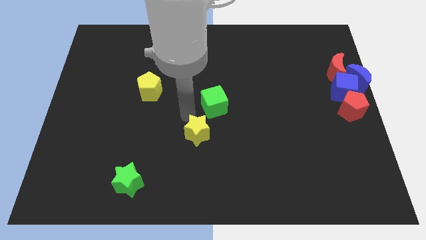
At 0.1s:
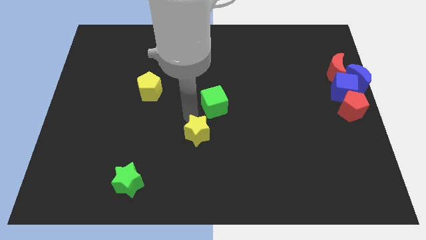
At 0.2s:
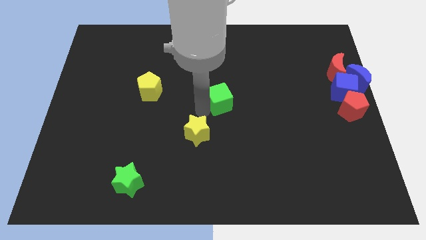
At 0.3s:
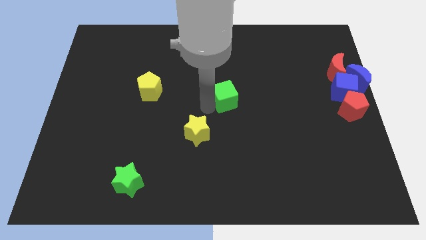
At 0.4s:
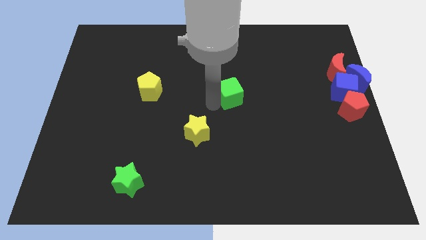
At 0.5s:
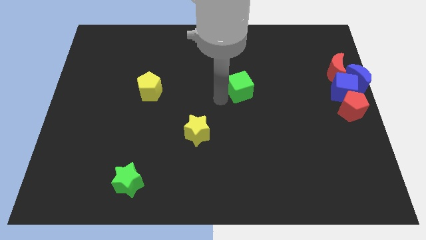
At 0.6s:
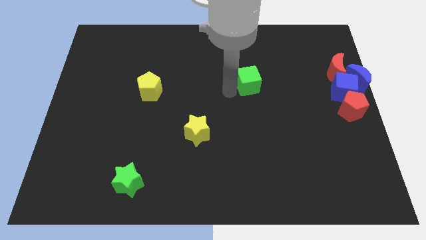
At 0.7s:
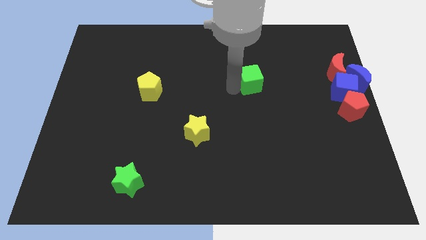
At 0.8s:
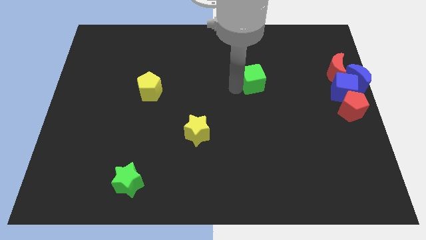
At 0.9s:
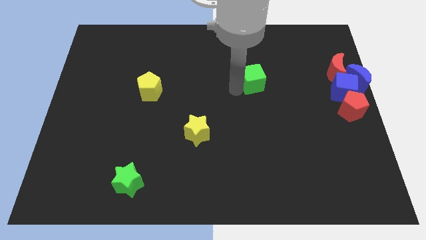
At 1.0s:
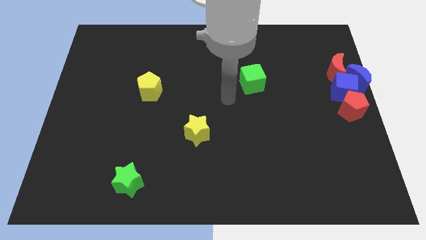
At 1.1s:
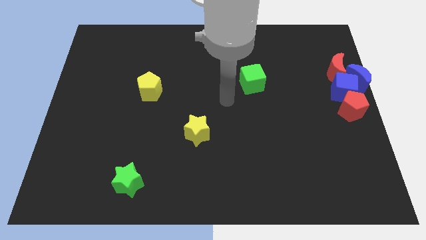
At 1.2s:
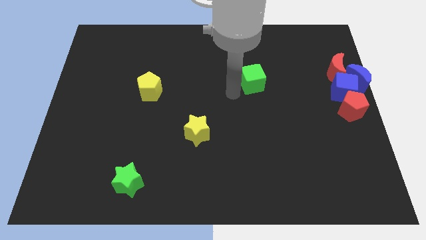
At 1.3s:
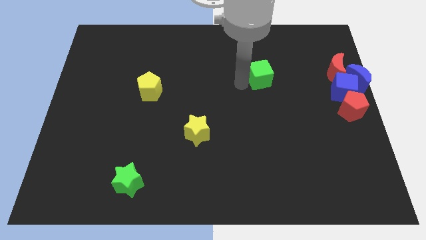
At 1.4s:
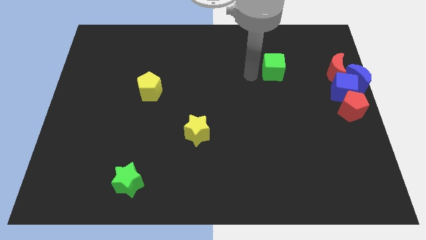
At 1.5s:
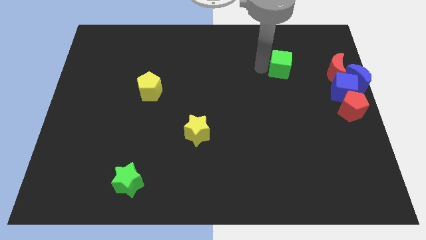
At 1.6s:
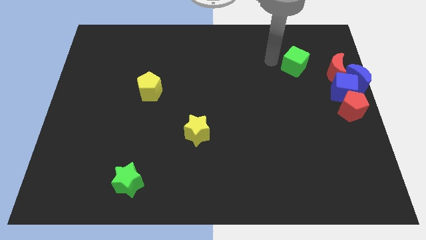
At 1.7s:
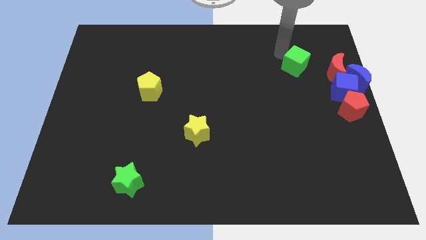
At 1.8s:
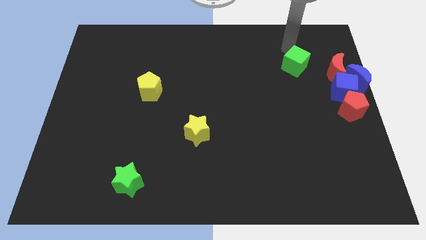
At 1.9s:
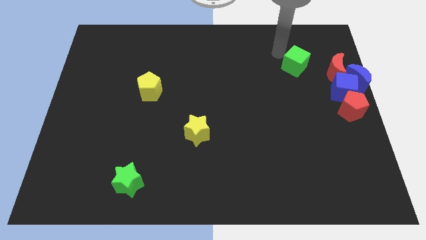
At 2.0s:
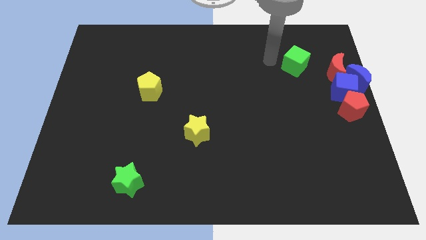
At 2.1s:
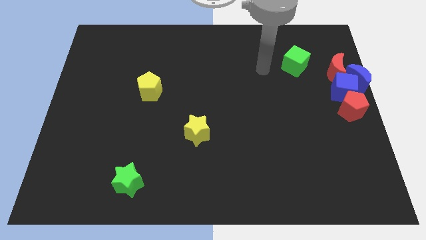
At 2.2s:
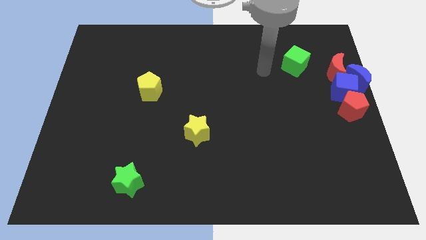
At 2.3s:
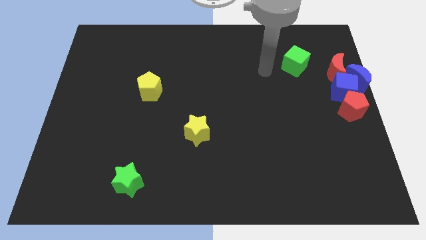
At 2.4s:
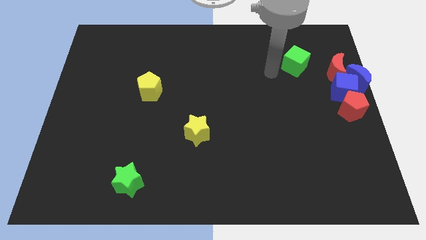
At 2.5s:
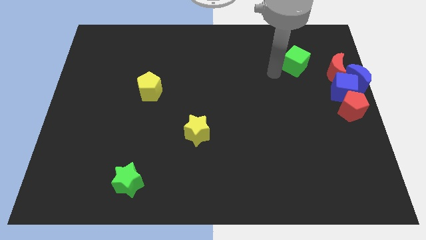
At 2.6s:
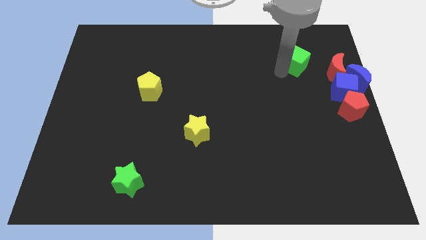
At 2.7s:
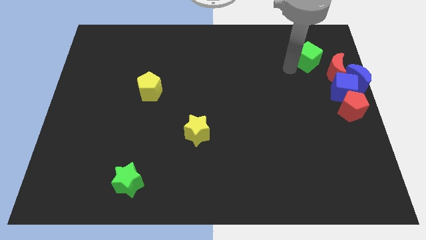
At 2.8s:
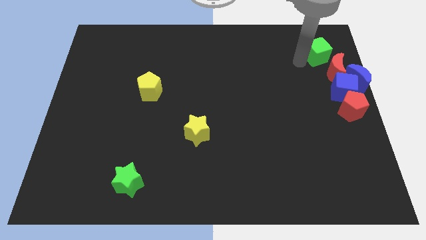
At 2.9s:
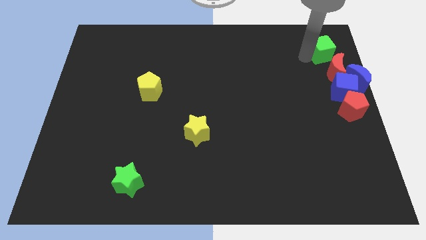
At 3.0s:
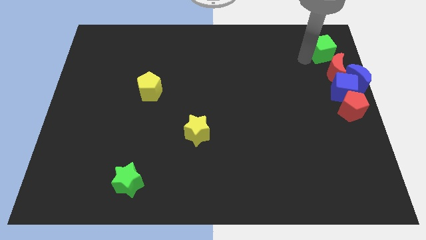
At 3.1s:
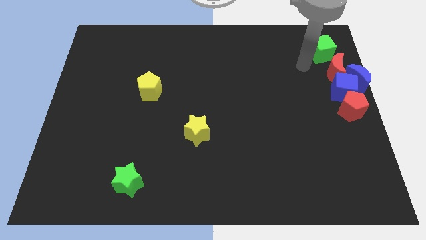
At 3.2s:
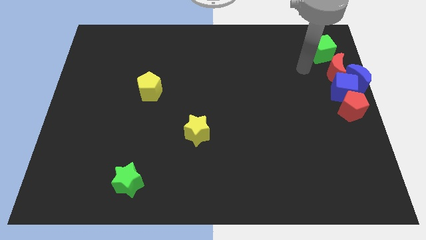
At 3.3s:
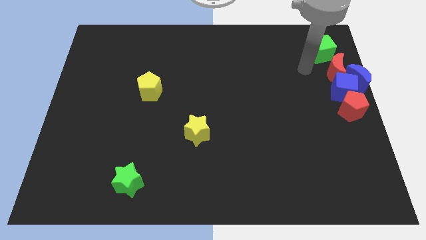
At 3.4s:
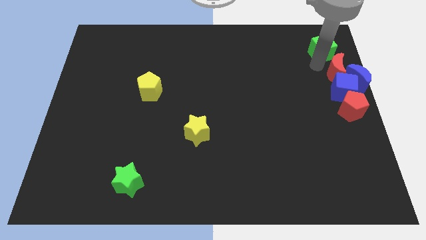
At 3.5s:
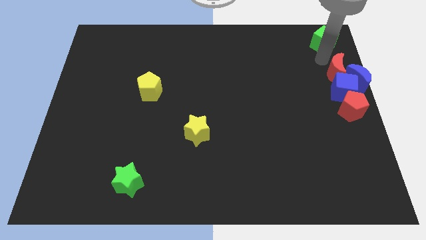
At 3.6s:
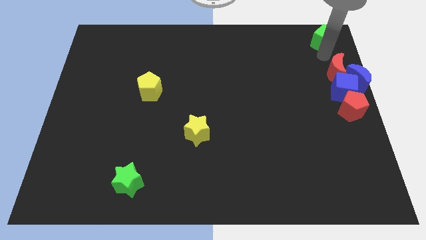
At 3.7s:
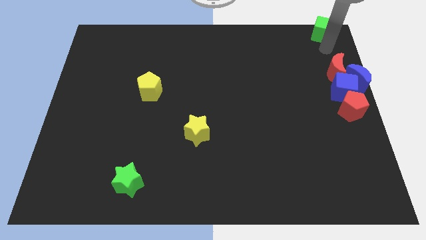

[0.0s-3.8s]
push the green cube to the top of the red crescent

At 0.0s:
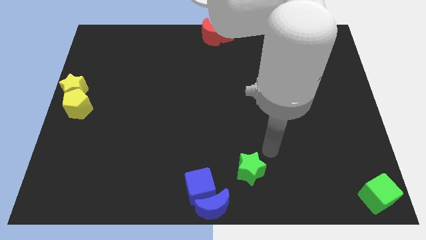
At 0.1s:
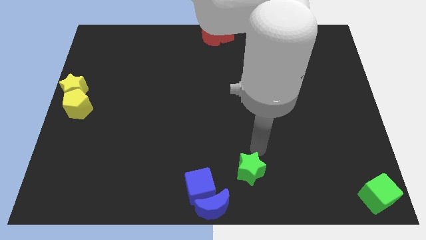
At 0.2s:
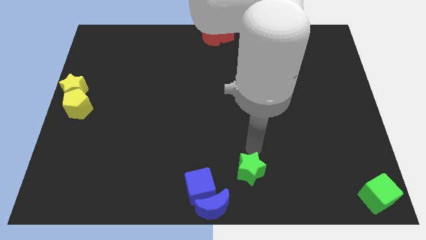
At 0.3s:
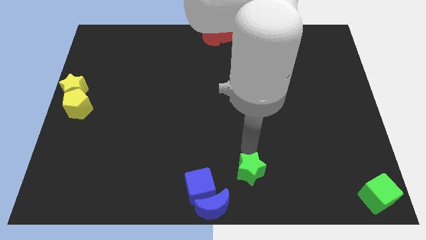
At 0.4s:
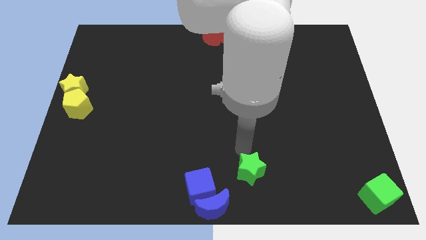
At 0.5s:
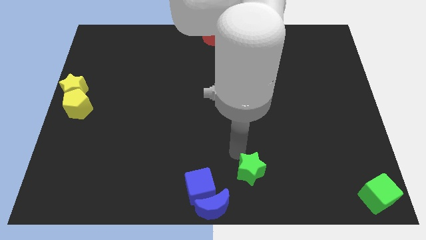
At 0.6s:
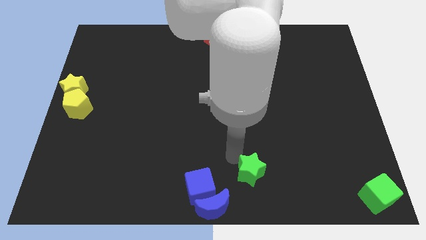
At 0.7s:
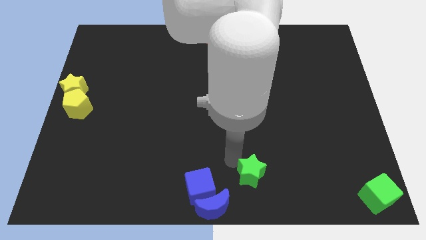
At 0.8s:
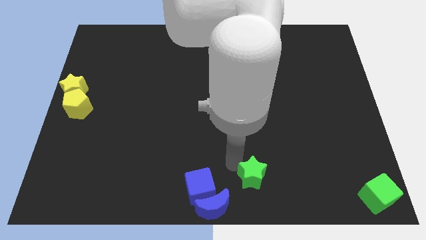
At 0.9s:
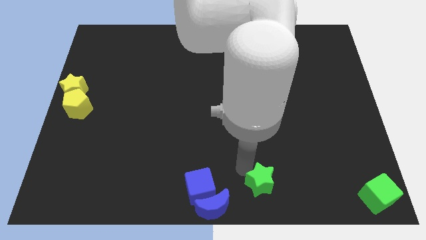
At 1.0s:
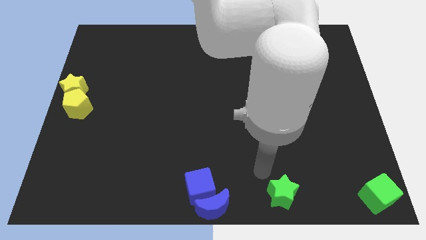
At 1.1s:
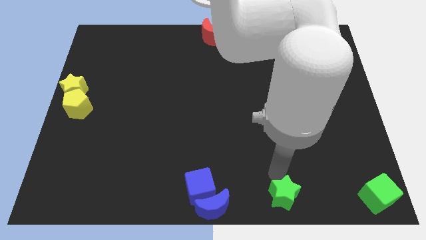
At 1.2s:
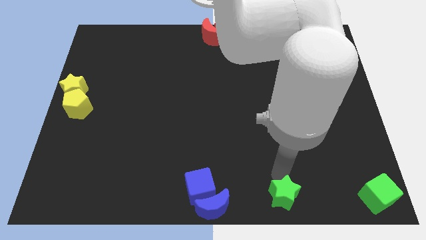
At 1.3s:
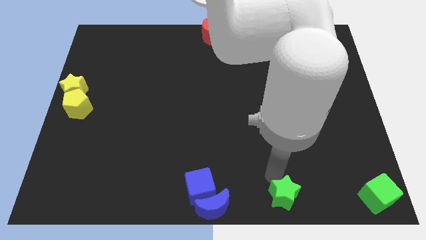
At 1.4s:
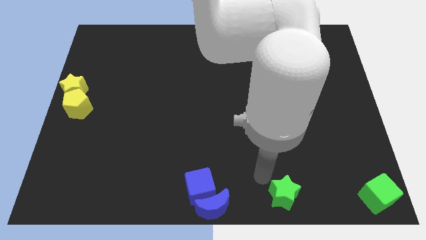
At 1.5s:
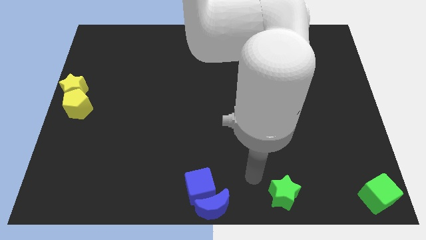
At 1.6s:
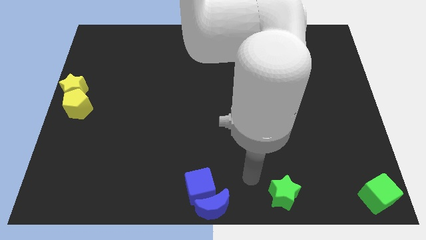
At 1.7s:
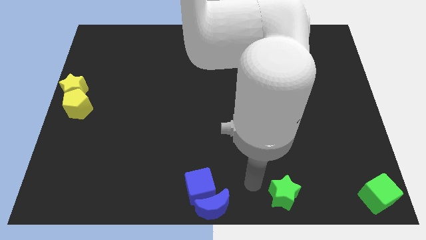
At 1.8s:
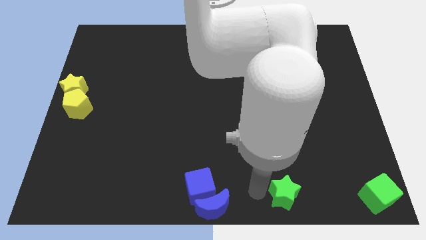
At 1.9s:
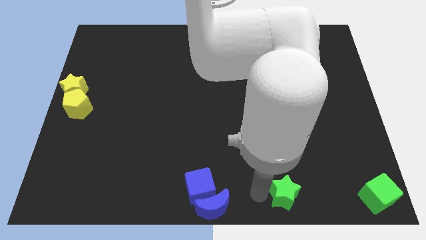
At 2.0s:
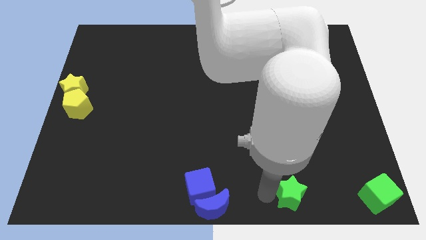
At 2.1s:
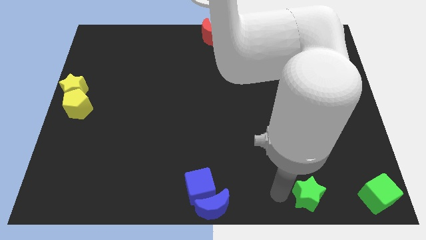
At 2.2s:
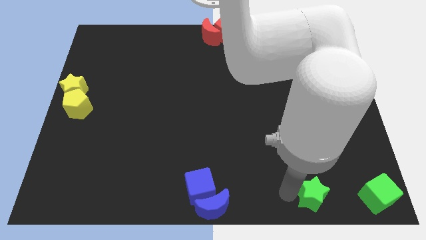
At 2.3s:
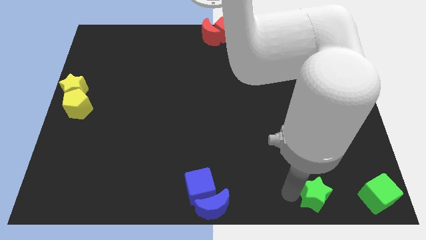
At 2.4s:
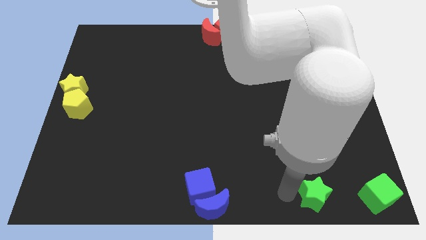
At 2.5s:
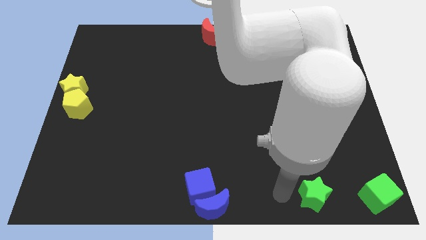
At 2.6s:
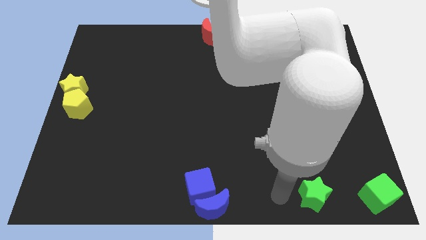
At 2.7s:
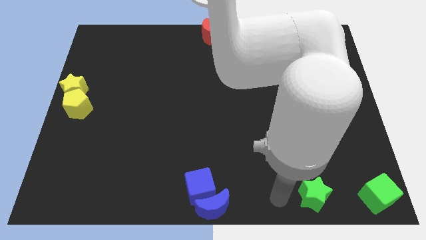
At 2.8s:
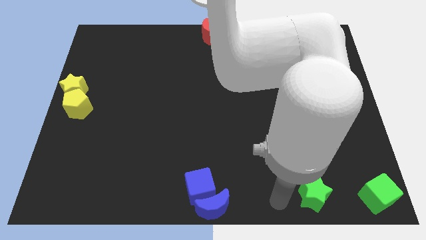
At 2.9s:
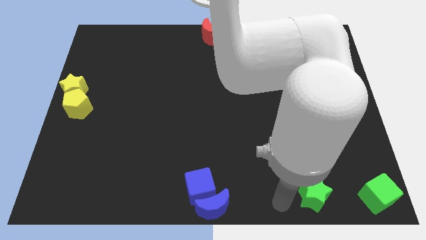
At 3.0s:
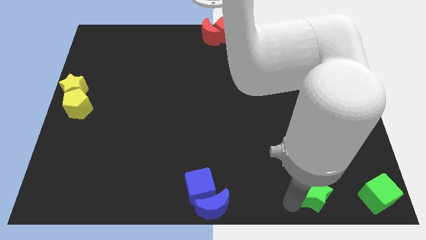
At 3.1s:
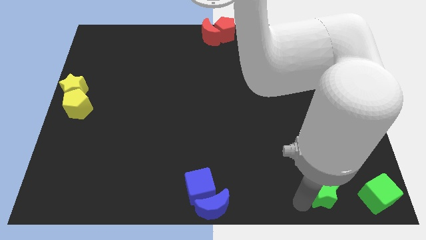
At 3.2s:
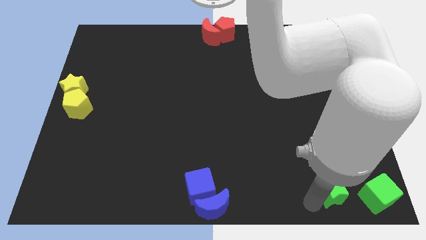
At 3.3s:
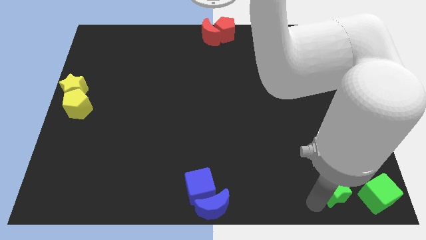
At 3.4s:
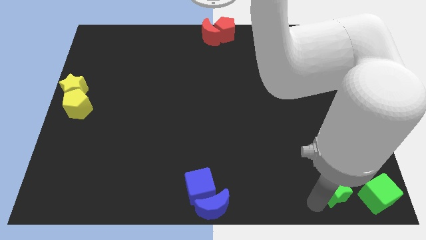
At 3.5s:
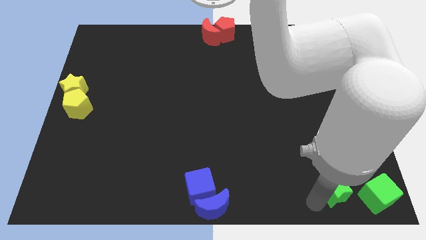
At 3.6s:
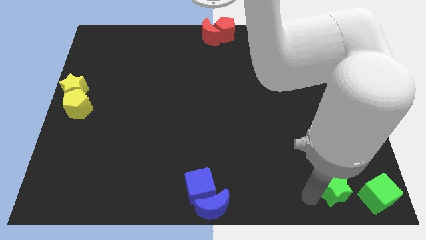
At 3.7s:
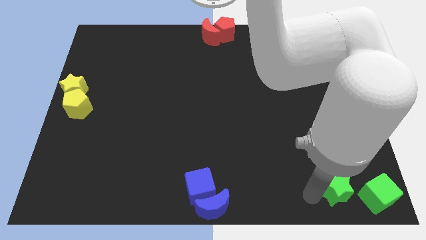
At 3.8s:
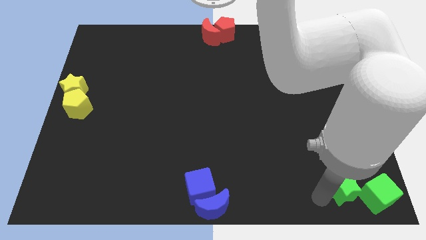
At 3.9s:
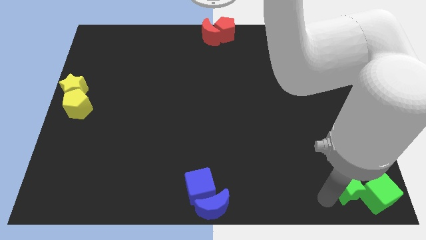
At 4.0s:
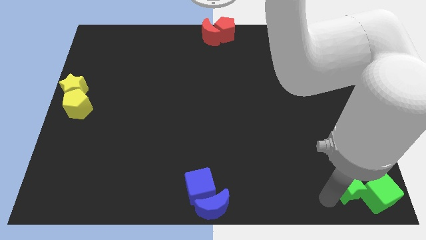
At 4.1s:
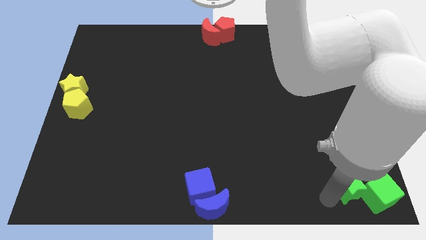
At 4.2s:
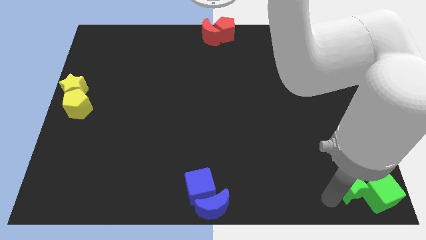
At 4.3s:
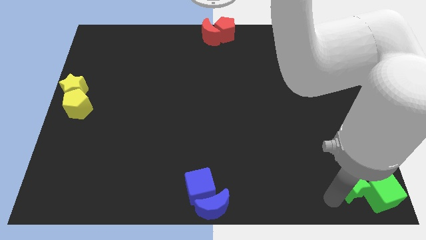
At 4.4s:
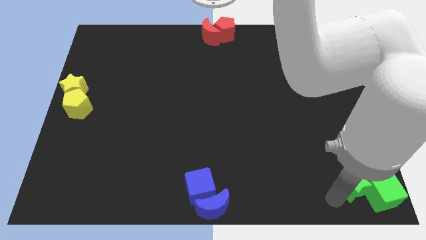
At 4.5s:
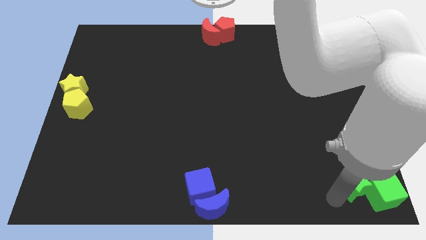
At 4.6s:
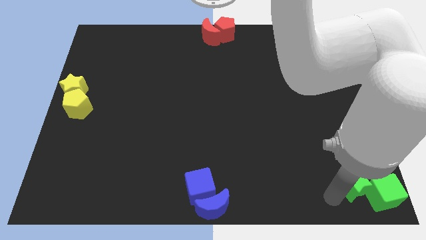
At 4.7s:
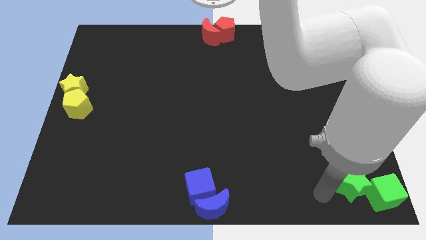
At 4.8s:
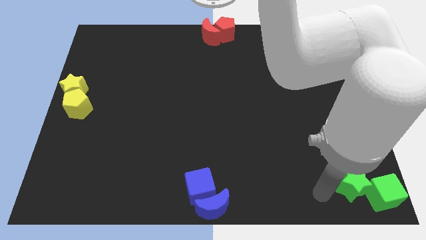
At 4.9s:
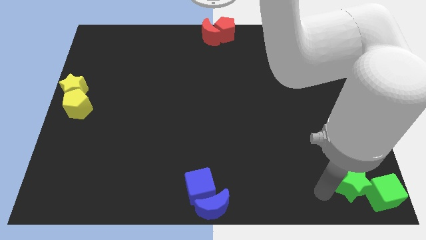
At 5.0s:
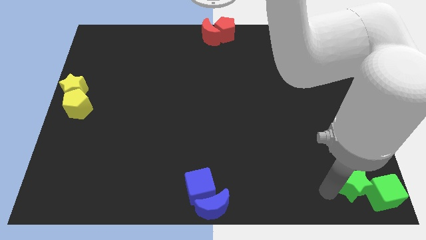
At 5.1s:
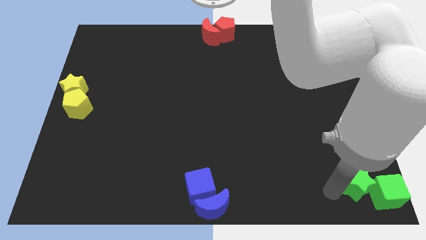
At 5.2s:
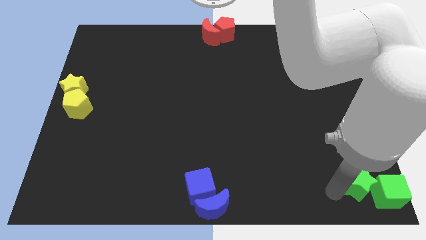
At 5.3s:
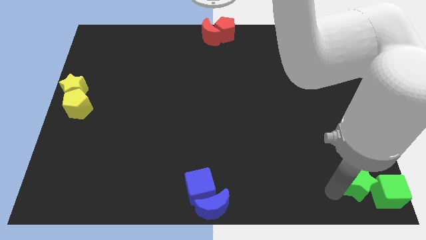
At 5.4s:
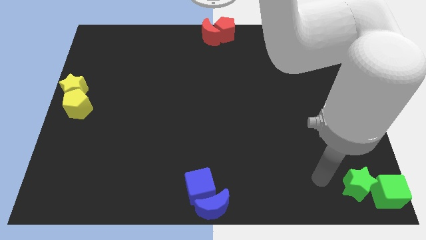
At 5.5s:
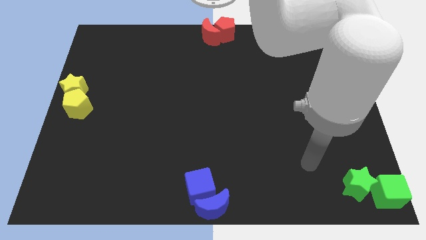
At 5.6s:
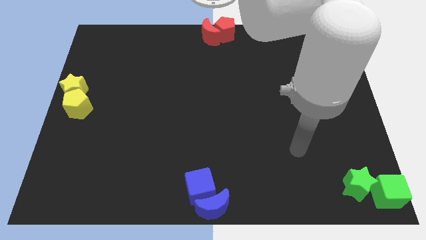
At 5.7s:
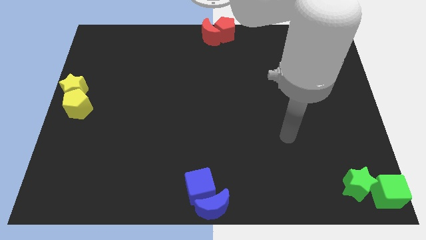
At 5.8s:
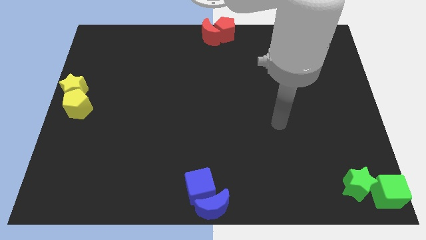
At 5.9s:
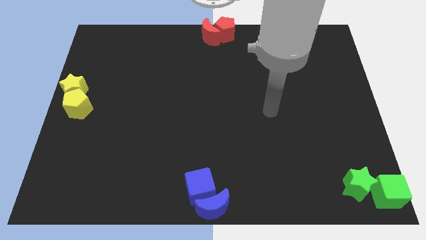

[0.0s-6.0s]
push the green star into the green cube
